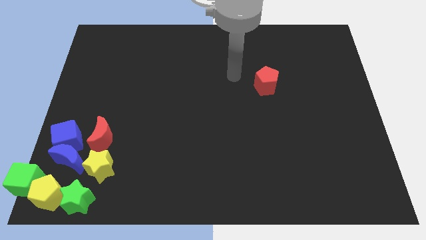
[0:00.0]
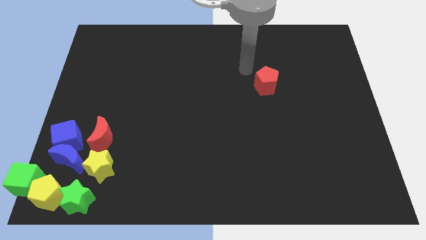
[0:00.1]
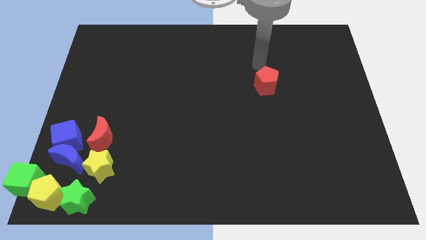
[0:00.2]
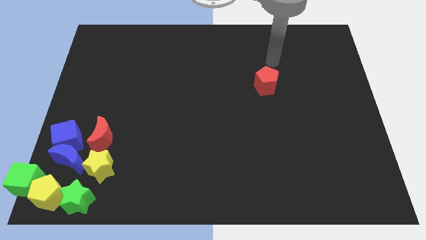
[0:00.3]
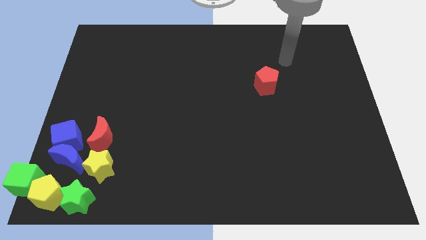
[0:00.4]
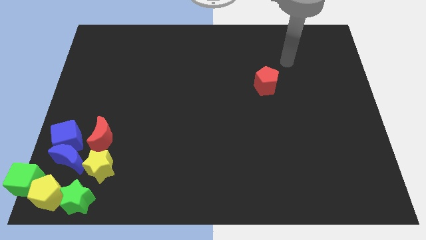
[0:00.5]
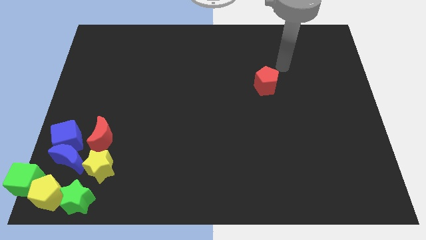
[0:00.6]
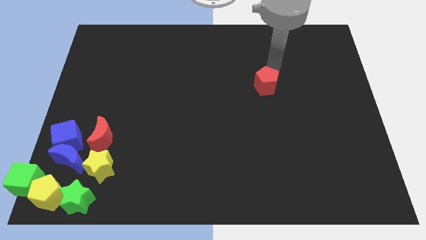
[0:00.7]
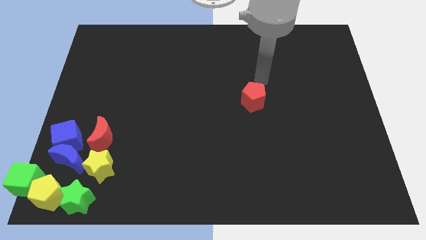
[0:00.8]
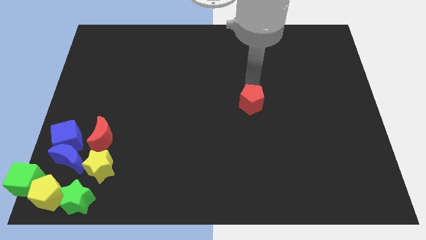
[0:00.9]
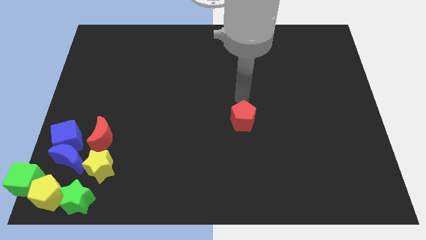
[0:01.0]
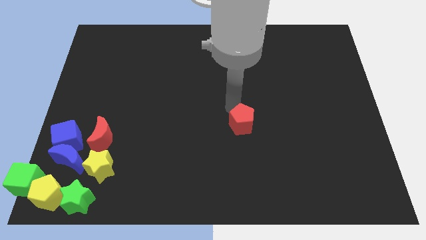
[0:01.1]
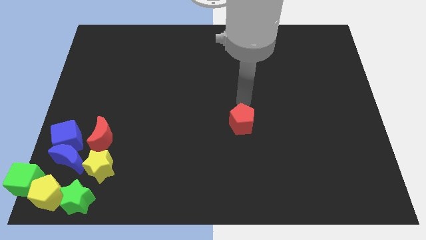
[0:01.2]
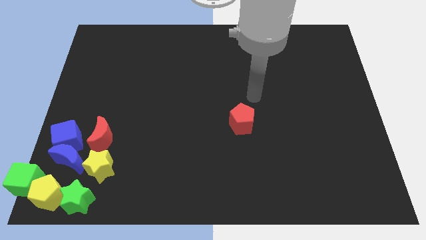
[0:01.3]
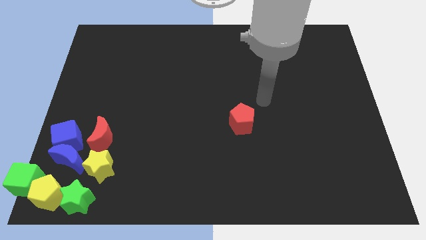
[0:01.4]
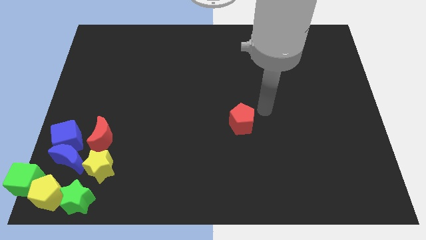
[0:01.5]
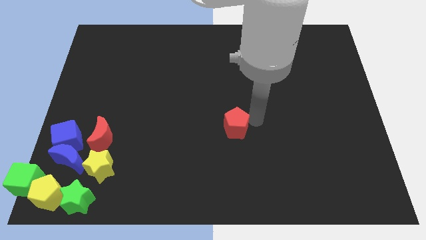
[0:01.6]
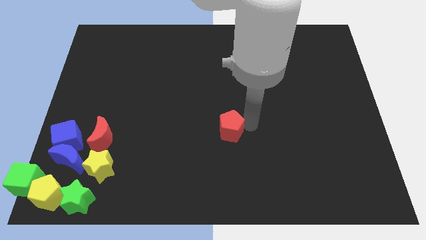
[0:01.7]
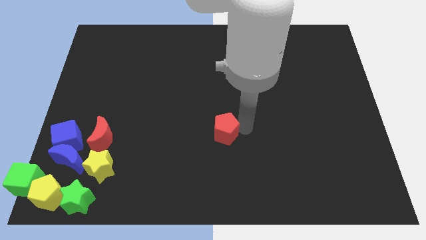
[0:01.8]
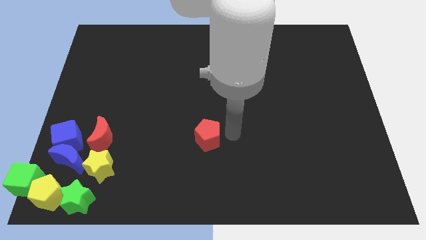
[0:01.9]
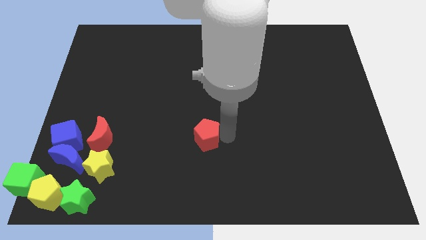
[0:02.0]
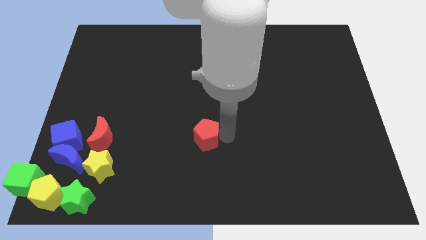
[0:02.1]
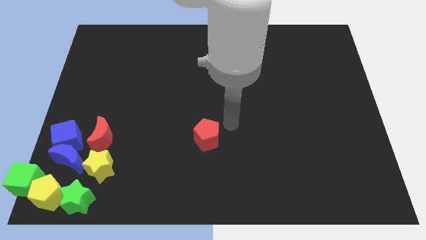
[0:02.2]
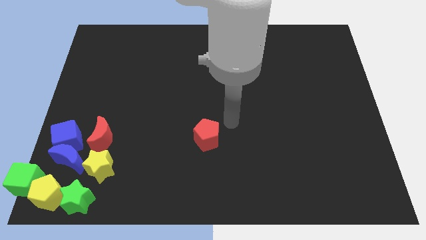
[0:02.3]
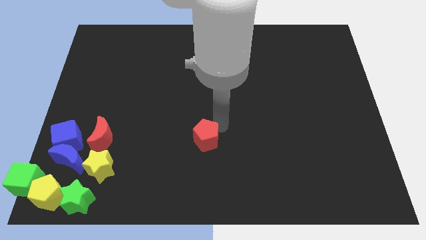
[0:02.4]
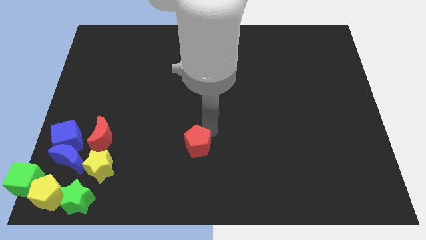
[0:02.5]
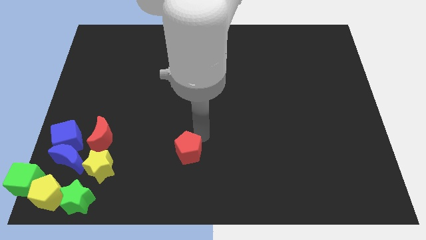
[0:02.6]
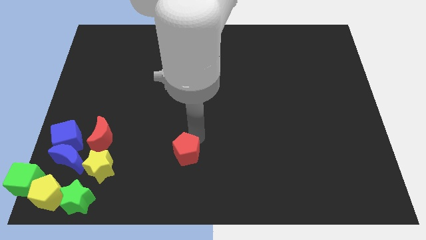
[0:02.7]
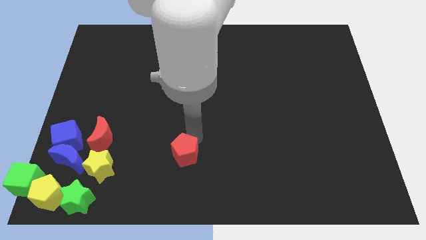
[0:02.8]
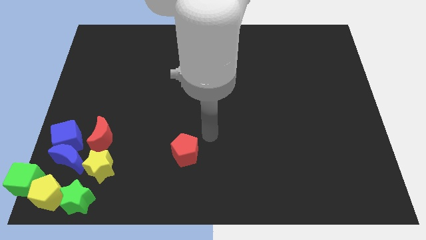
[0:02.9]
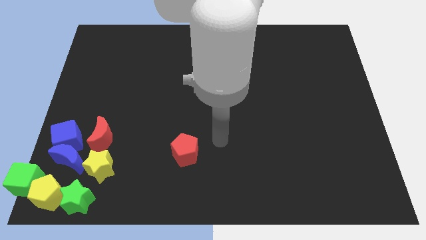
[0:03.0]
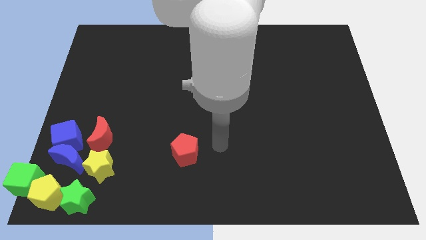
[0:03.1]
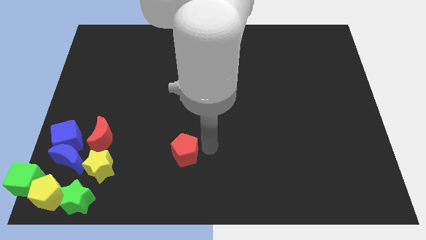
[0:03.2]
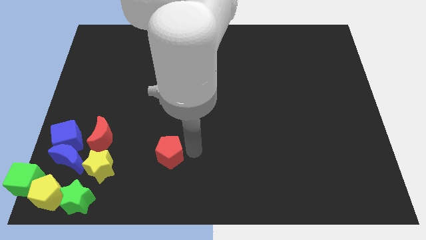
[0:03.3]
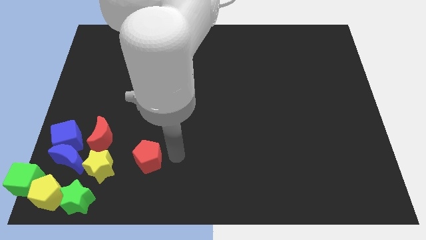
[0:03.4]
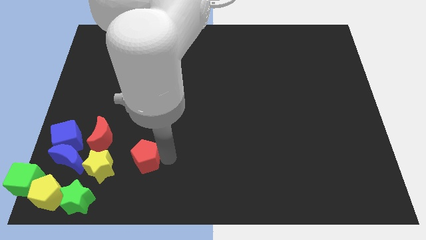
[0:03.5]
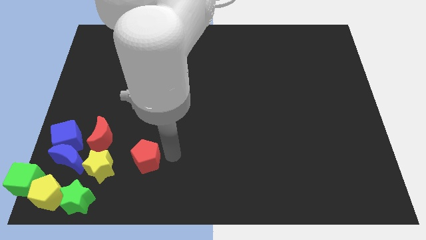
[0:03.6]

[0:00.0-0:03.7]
slide the red pentagon towards the yellow star

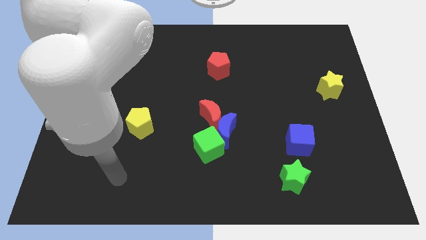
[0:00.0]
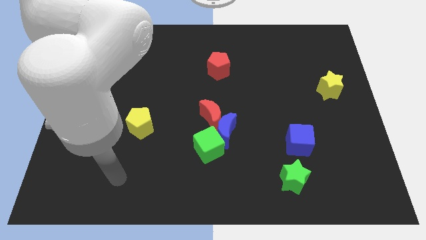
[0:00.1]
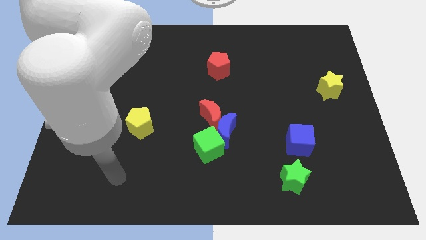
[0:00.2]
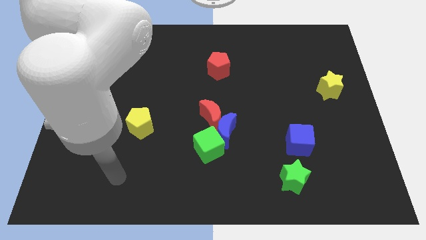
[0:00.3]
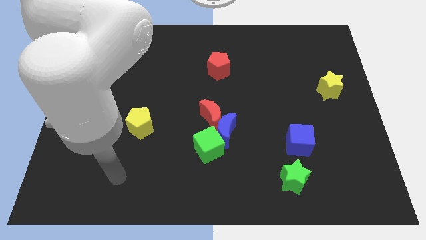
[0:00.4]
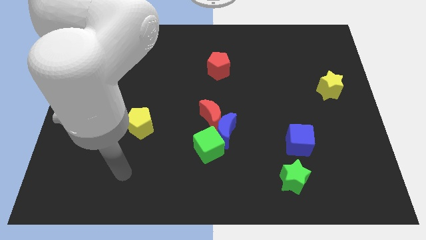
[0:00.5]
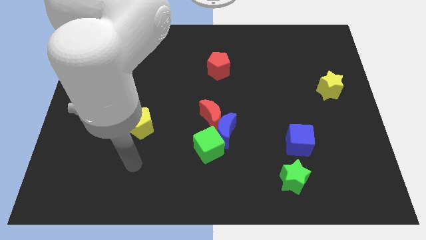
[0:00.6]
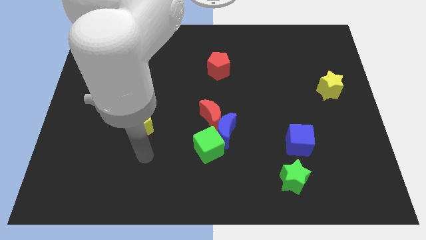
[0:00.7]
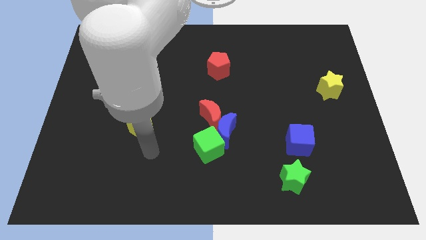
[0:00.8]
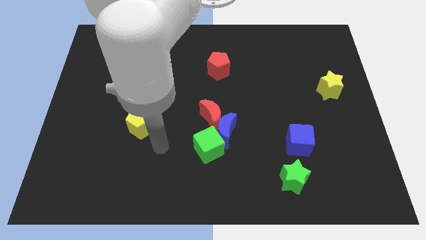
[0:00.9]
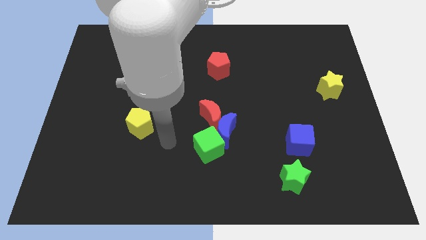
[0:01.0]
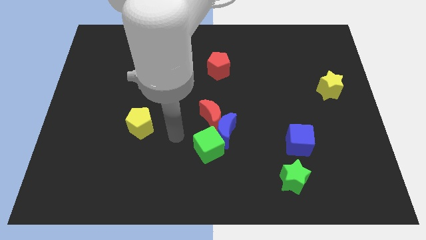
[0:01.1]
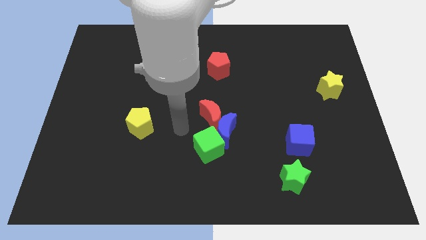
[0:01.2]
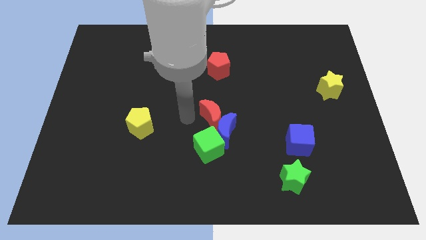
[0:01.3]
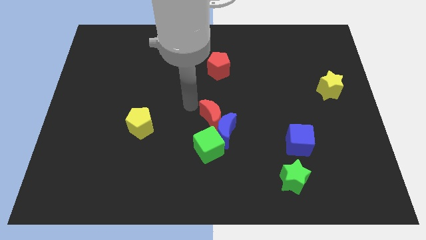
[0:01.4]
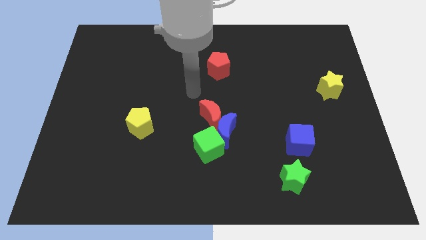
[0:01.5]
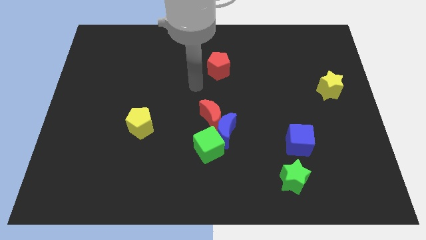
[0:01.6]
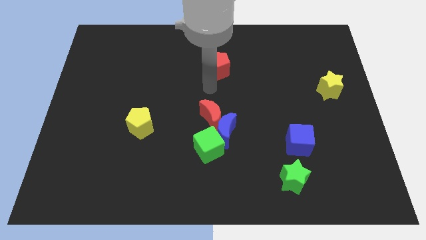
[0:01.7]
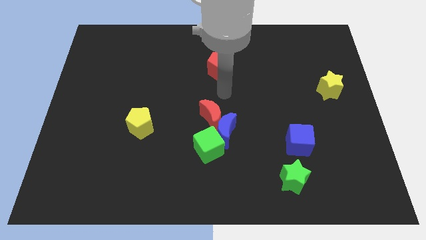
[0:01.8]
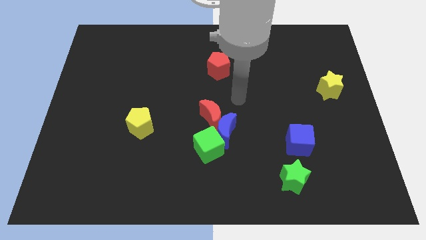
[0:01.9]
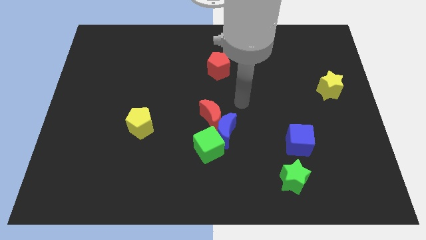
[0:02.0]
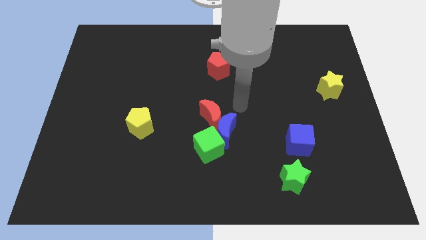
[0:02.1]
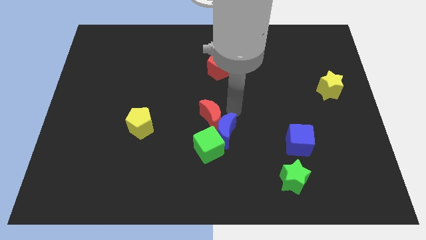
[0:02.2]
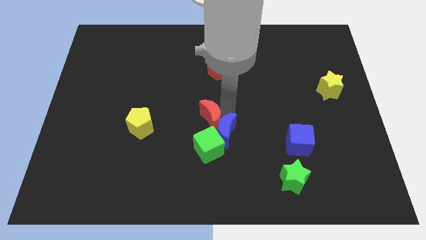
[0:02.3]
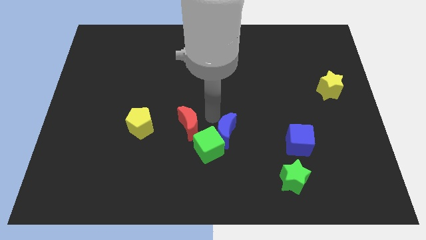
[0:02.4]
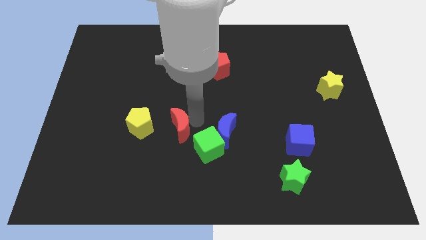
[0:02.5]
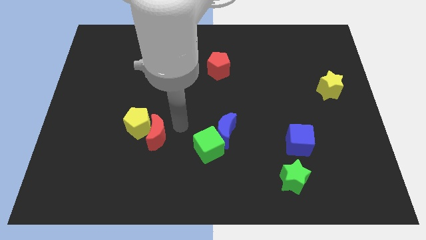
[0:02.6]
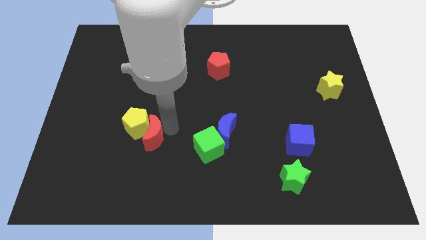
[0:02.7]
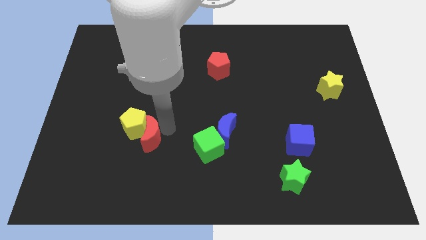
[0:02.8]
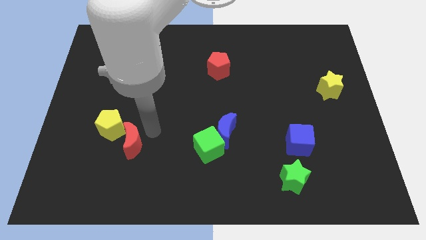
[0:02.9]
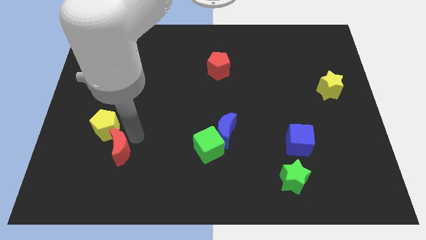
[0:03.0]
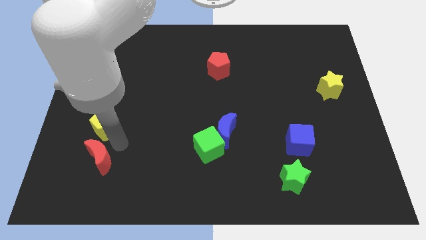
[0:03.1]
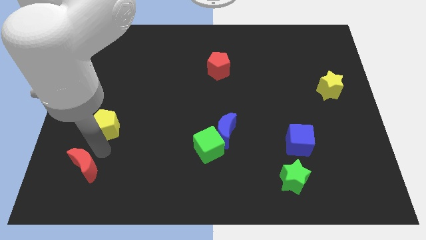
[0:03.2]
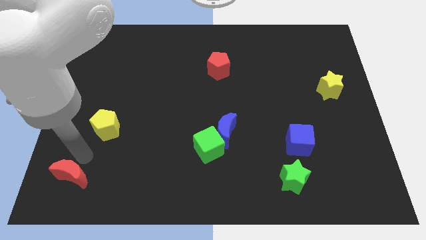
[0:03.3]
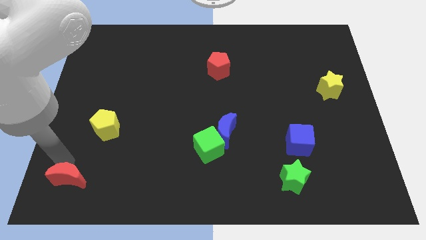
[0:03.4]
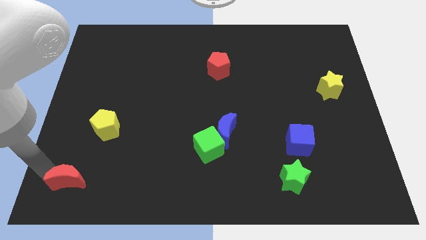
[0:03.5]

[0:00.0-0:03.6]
move the red moon diagonally bottom left to the yellow pentagon

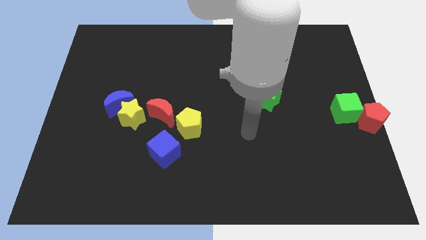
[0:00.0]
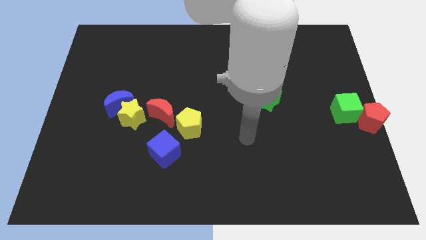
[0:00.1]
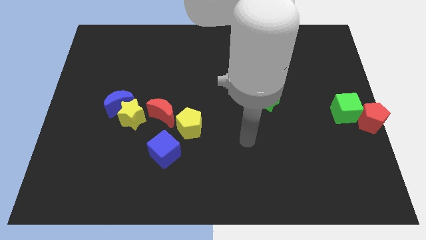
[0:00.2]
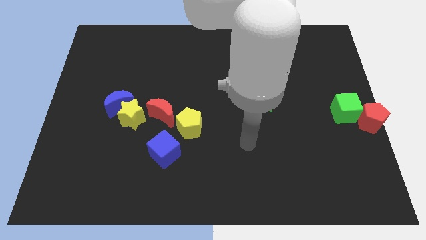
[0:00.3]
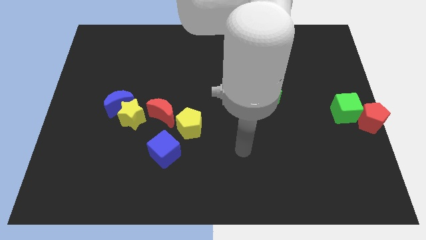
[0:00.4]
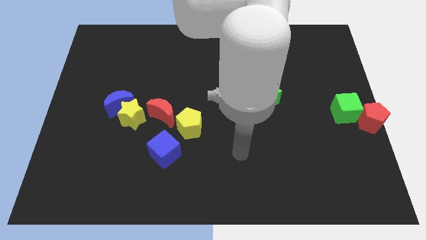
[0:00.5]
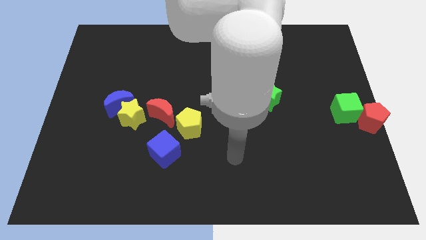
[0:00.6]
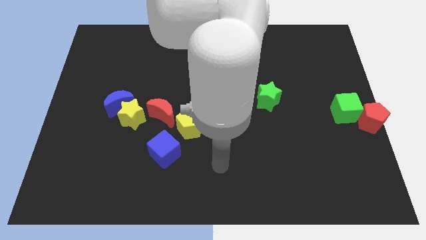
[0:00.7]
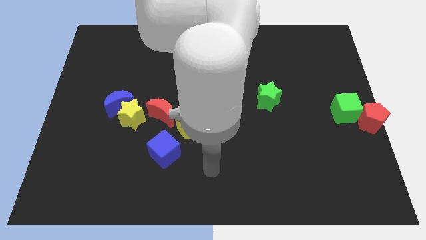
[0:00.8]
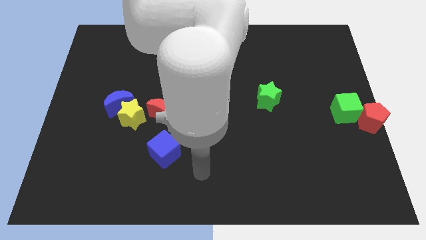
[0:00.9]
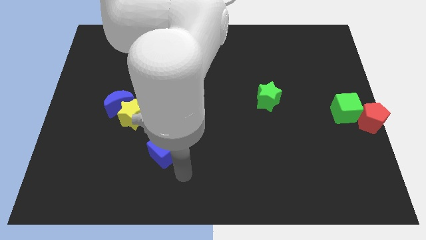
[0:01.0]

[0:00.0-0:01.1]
move your arm away from the green star

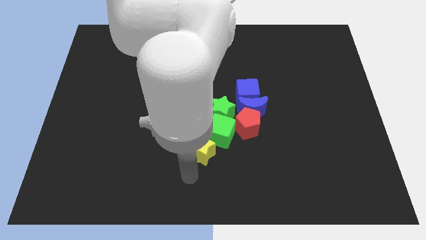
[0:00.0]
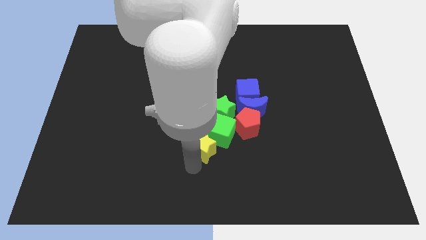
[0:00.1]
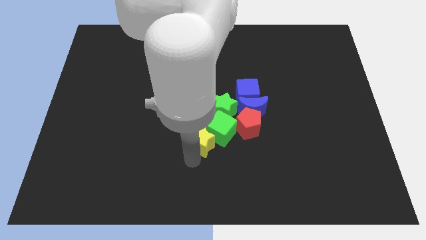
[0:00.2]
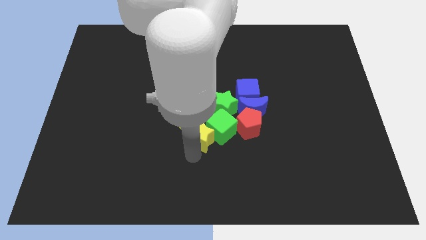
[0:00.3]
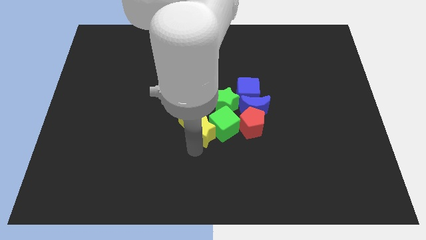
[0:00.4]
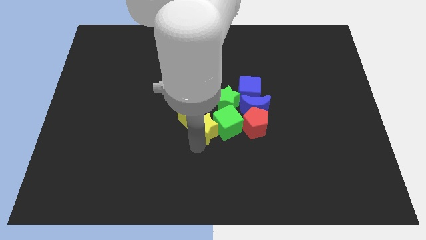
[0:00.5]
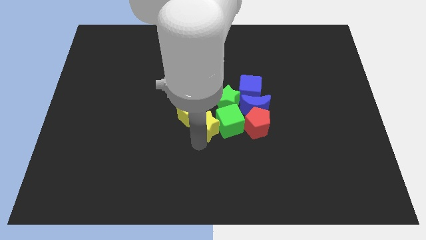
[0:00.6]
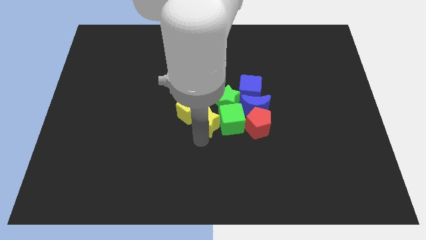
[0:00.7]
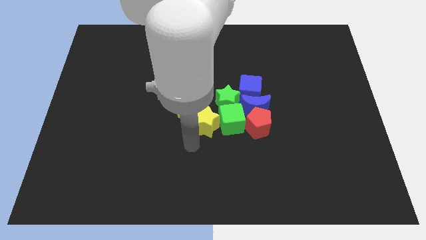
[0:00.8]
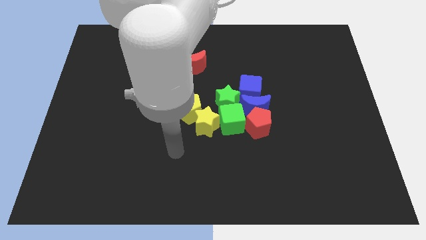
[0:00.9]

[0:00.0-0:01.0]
push the yellow star into the green cube
